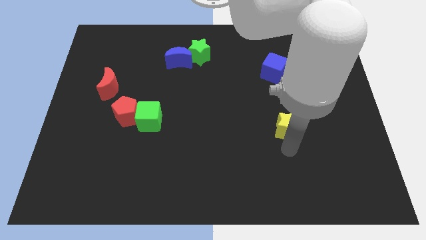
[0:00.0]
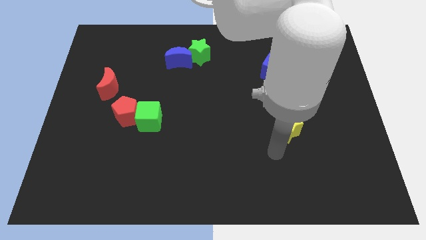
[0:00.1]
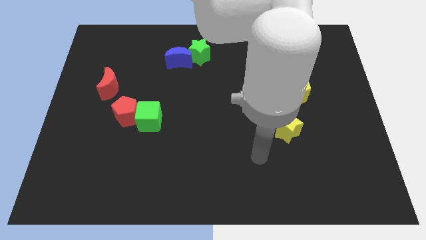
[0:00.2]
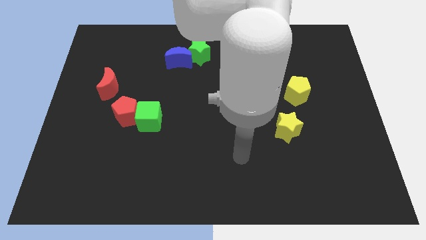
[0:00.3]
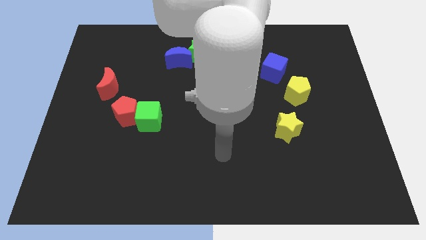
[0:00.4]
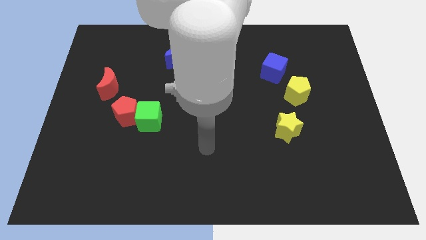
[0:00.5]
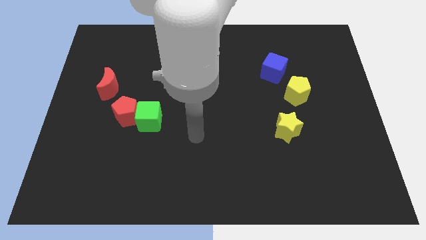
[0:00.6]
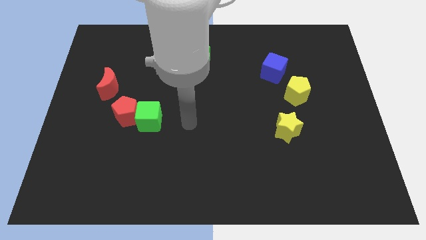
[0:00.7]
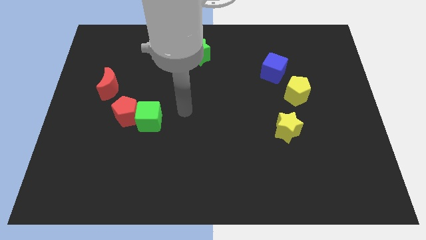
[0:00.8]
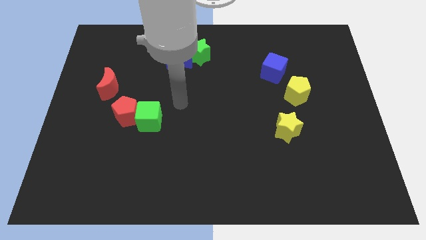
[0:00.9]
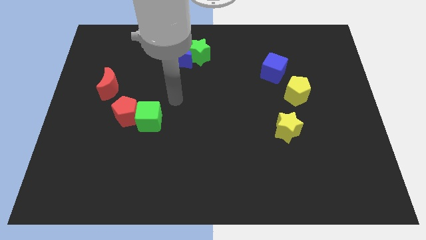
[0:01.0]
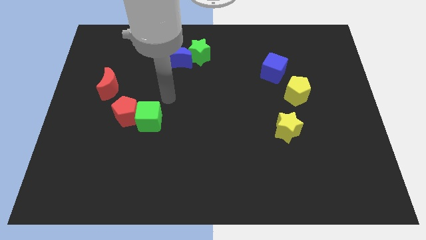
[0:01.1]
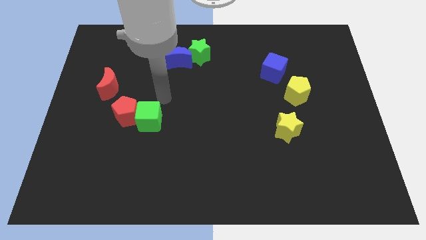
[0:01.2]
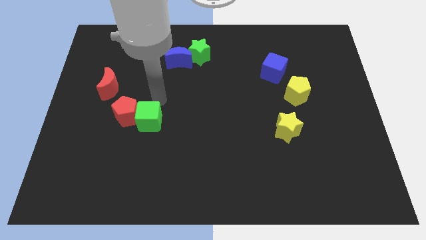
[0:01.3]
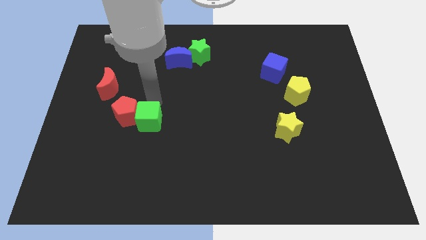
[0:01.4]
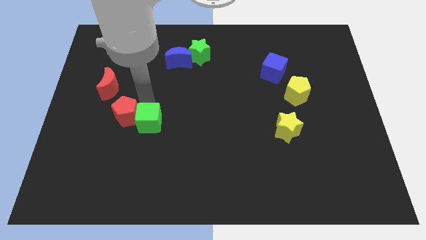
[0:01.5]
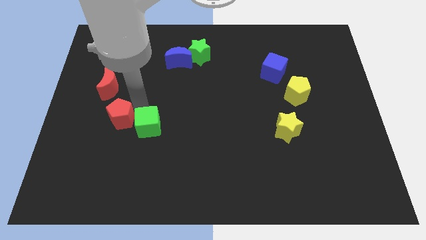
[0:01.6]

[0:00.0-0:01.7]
tab the top side of the green cube

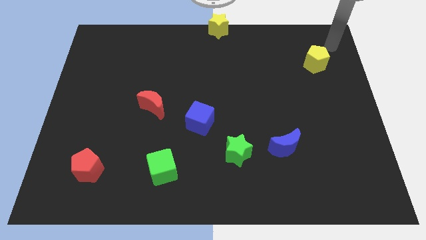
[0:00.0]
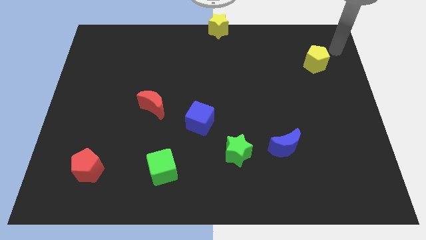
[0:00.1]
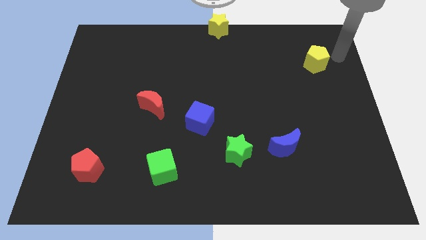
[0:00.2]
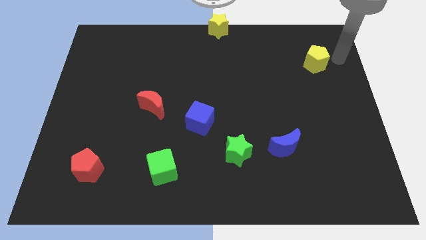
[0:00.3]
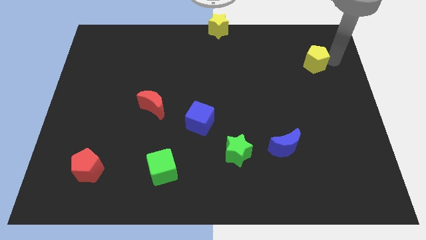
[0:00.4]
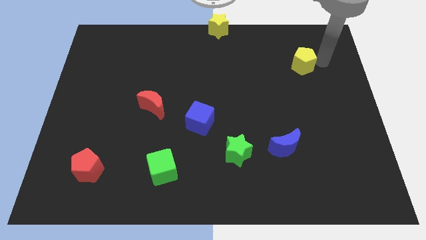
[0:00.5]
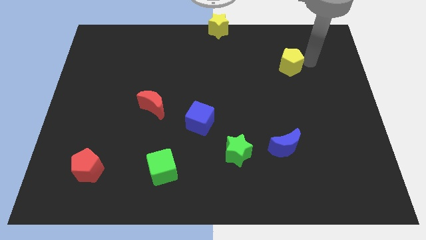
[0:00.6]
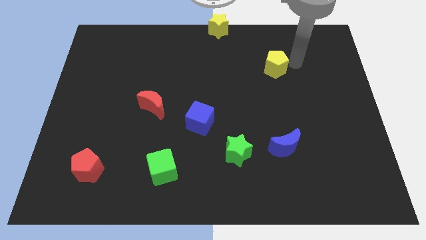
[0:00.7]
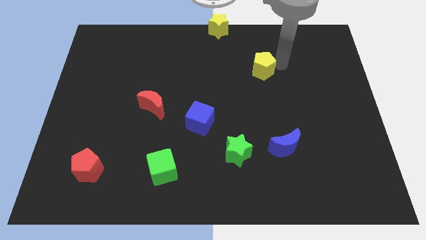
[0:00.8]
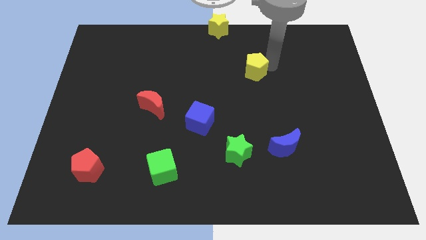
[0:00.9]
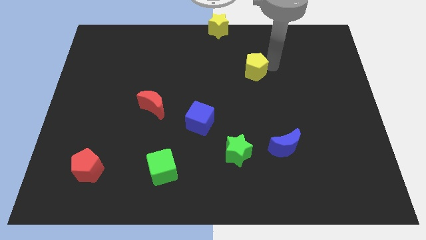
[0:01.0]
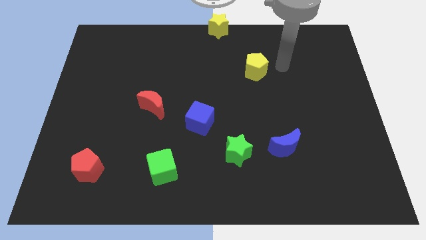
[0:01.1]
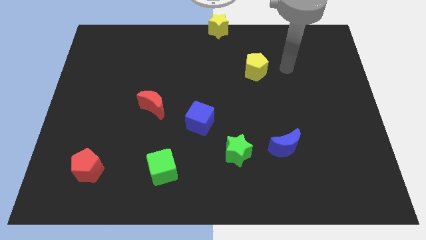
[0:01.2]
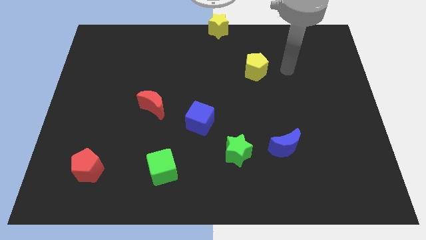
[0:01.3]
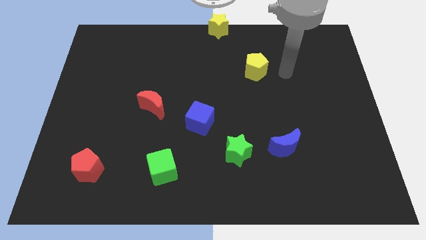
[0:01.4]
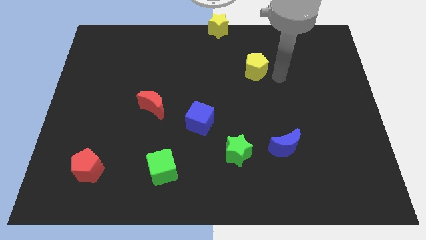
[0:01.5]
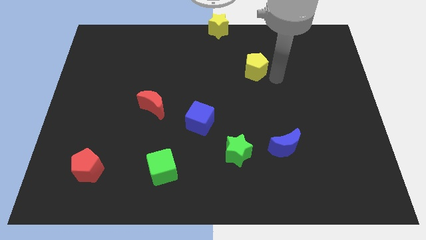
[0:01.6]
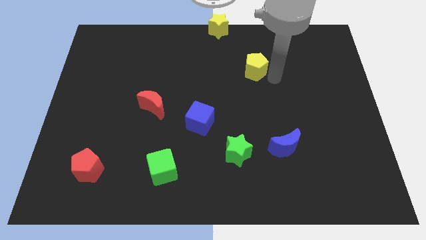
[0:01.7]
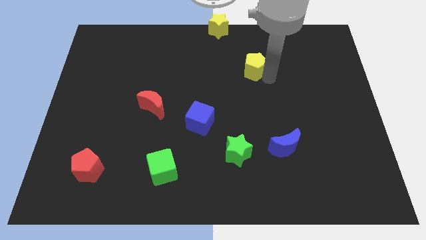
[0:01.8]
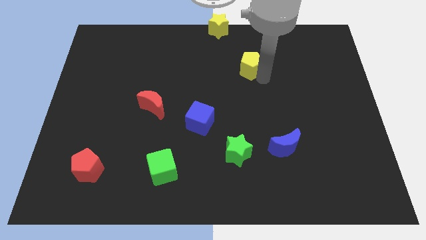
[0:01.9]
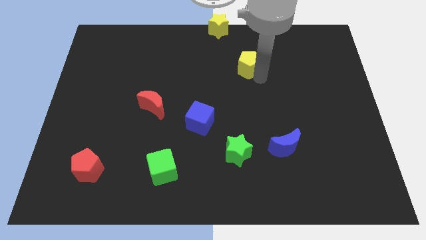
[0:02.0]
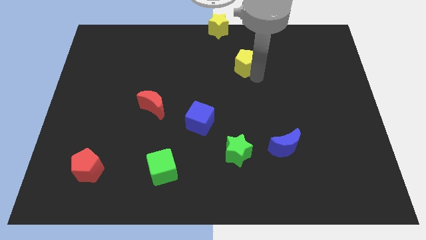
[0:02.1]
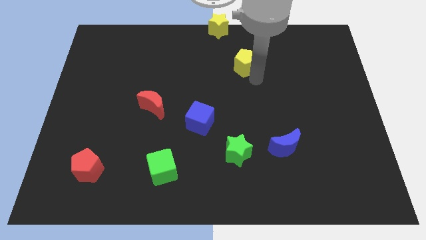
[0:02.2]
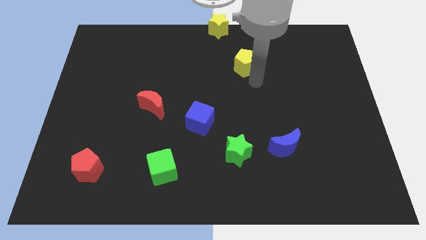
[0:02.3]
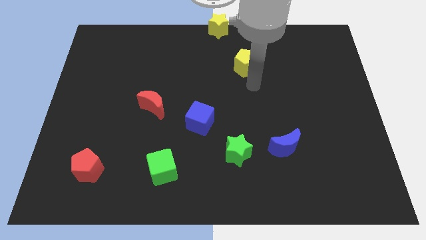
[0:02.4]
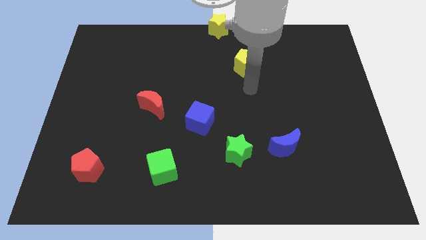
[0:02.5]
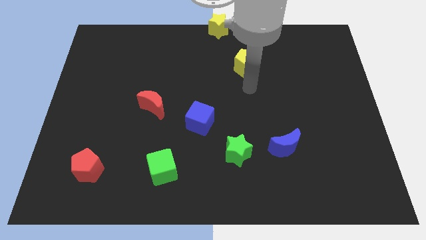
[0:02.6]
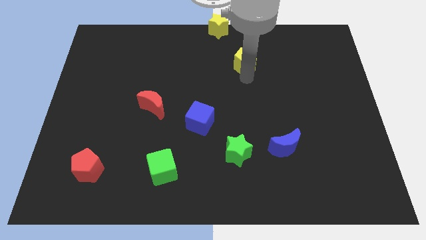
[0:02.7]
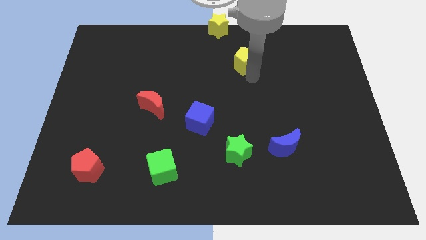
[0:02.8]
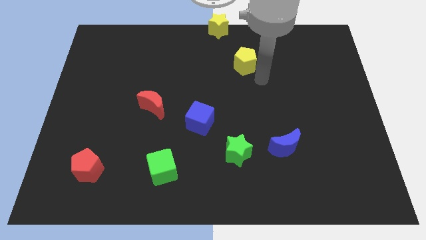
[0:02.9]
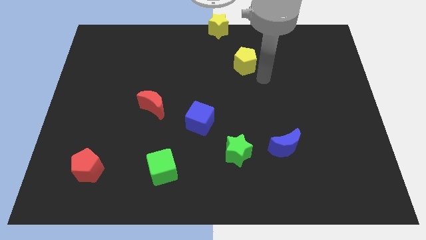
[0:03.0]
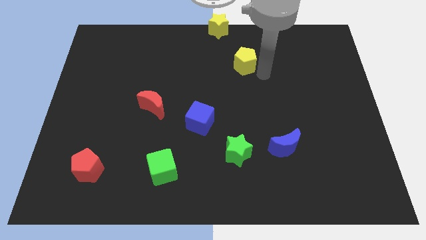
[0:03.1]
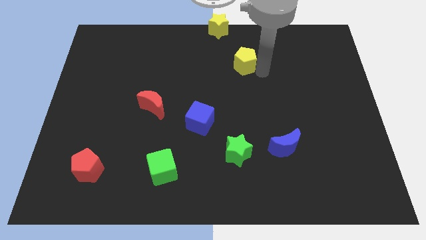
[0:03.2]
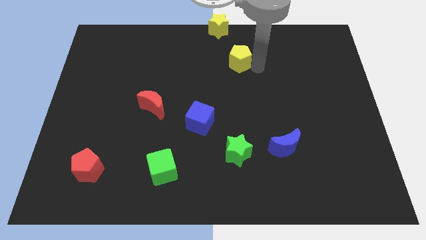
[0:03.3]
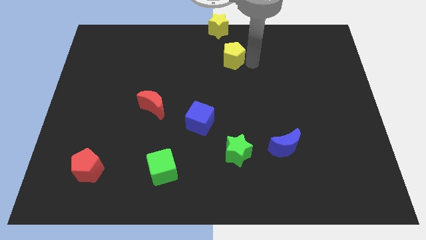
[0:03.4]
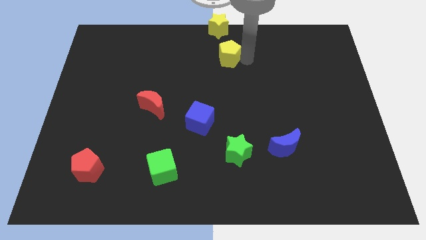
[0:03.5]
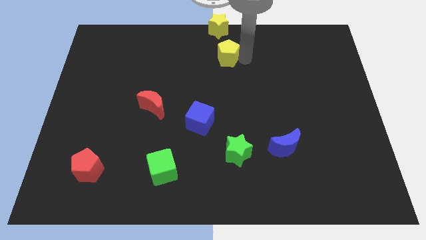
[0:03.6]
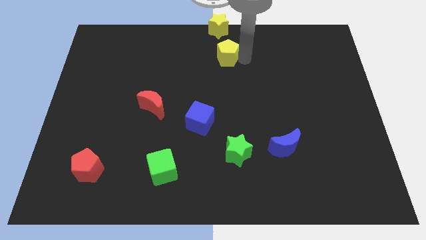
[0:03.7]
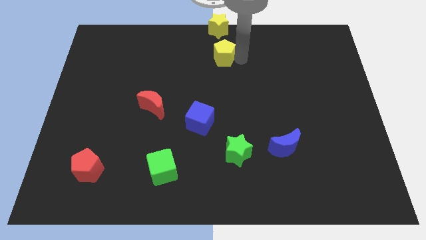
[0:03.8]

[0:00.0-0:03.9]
place the yellow pentagon below the yellow star

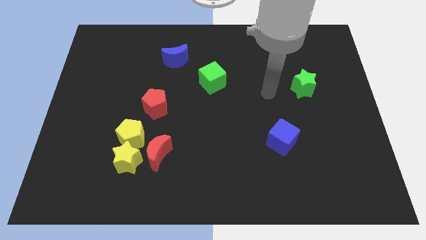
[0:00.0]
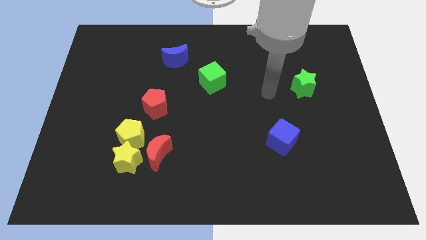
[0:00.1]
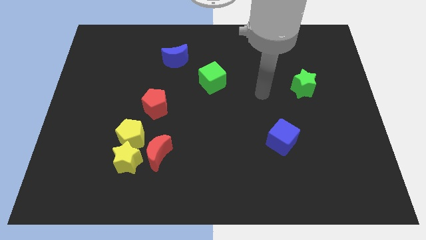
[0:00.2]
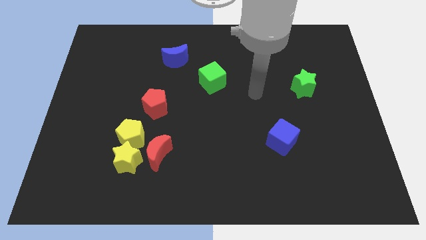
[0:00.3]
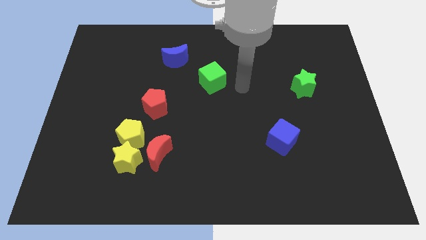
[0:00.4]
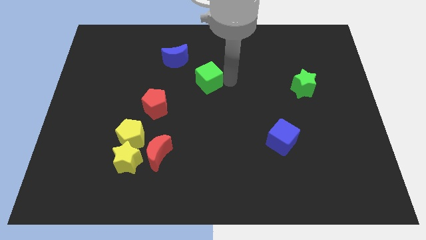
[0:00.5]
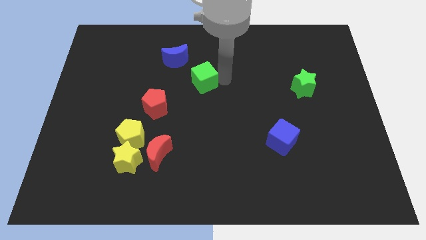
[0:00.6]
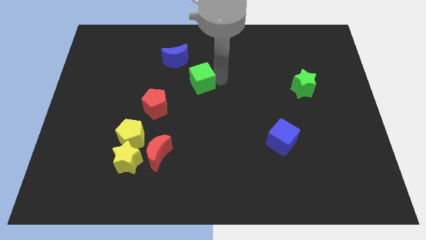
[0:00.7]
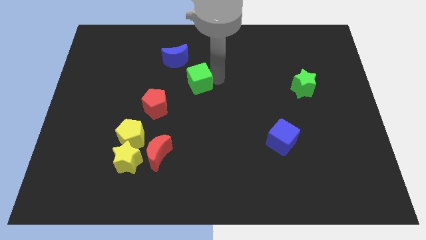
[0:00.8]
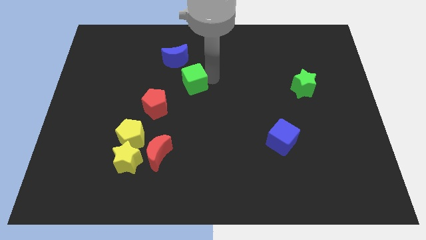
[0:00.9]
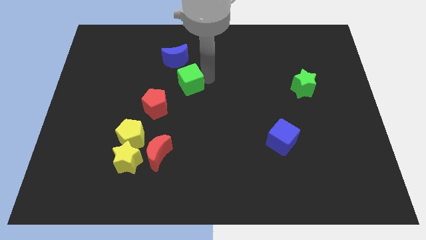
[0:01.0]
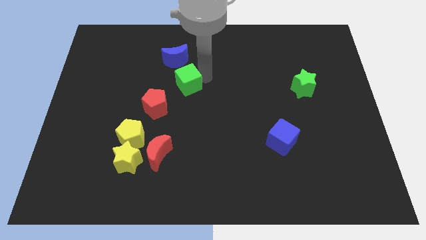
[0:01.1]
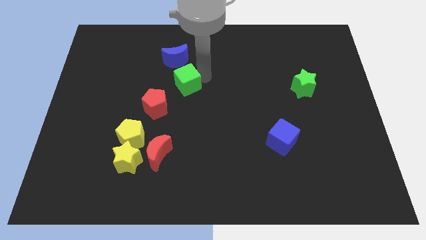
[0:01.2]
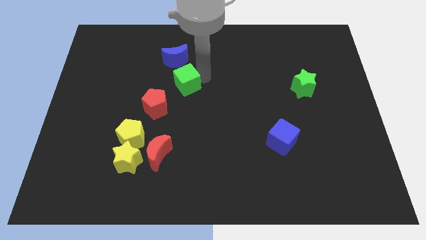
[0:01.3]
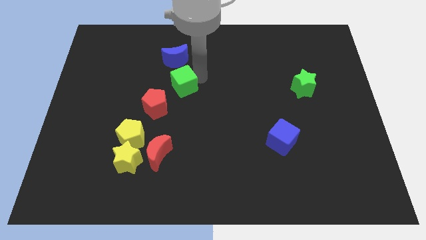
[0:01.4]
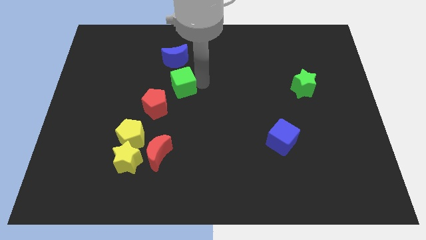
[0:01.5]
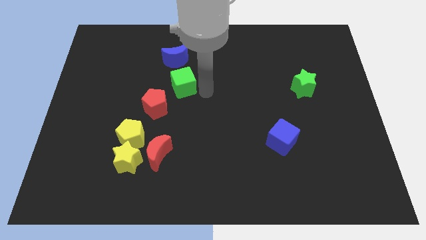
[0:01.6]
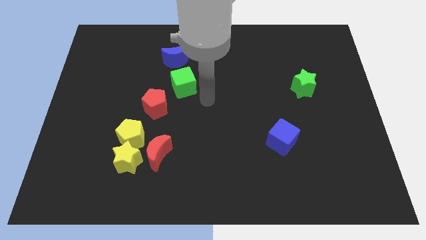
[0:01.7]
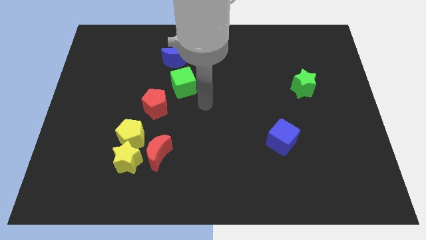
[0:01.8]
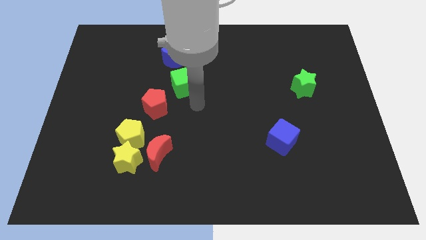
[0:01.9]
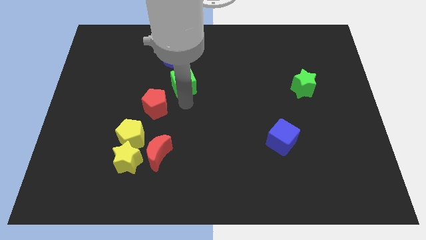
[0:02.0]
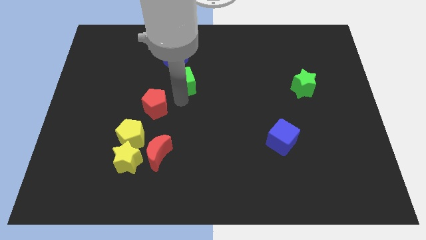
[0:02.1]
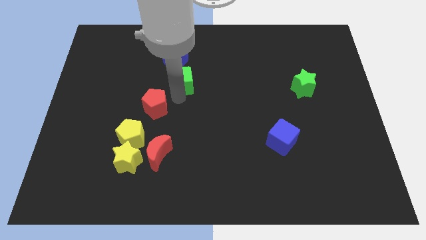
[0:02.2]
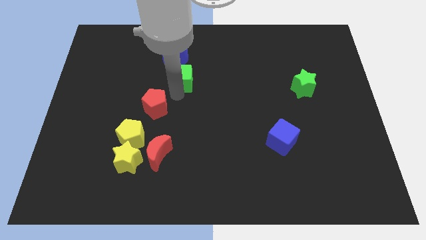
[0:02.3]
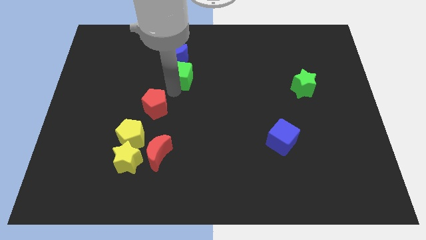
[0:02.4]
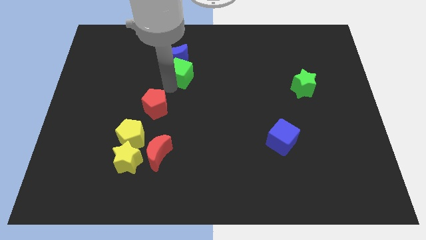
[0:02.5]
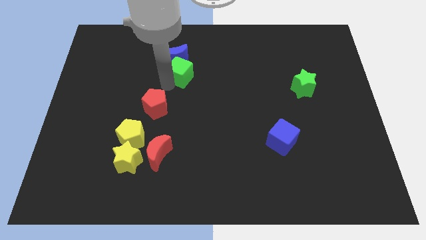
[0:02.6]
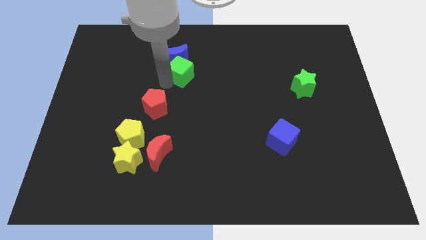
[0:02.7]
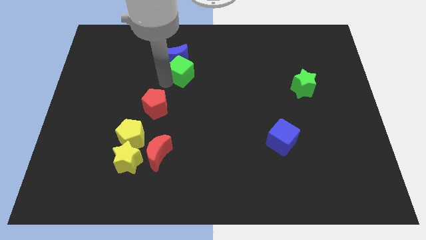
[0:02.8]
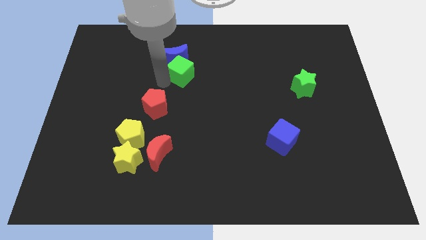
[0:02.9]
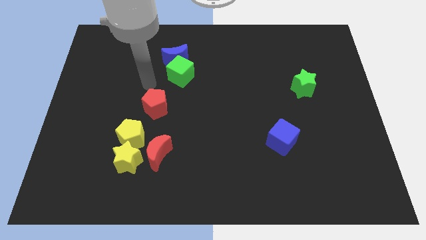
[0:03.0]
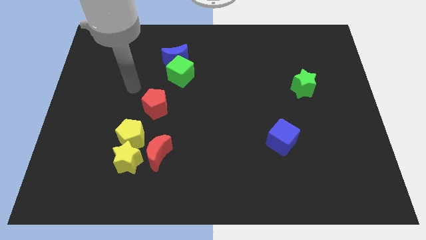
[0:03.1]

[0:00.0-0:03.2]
place the green cube under the blue crescent

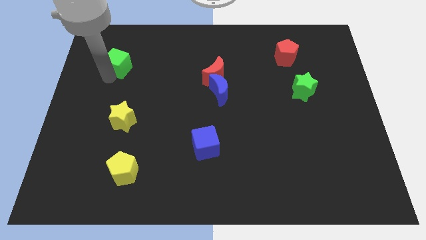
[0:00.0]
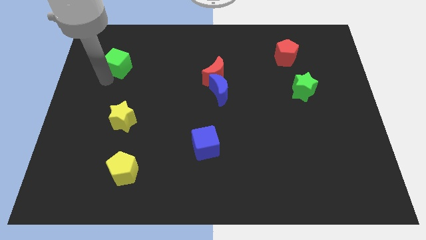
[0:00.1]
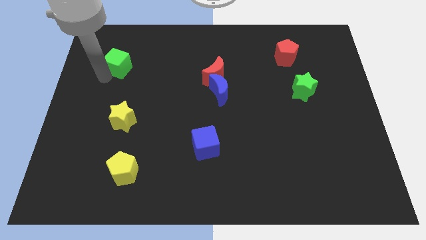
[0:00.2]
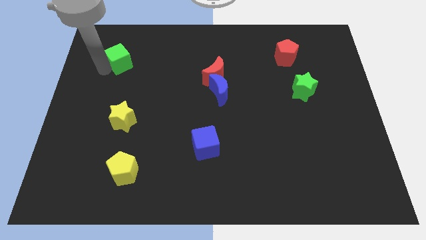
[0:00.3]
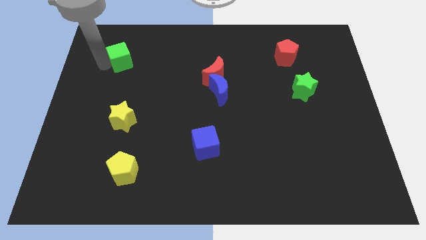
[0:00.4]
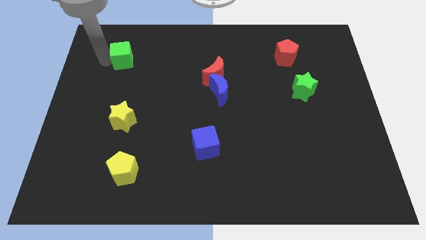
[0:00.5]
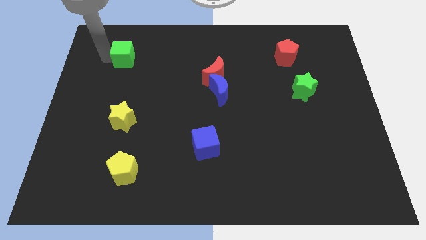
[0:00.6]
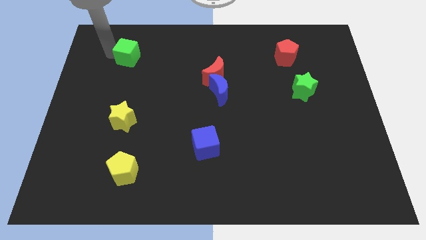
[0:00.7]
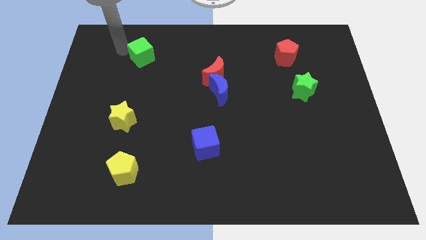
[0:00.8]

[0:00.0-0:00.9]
place the green cube at the top of yellow star
